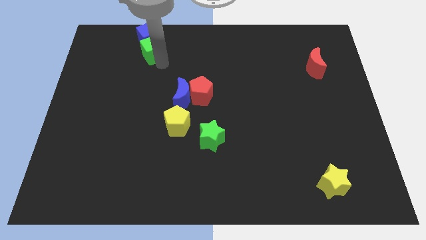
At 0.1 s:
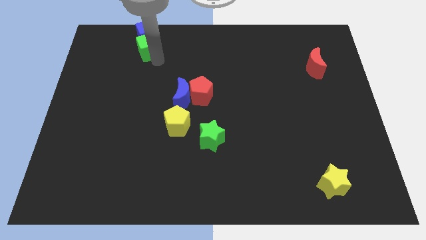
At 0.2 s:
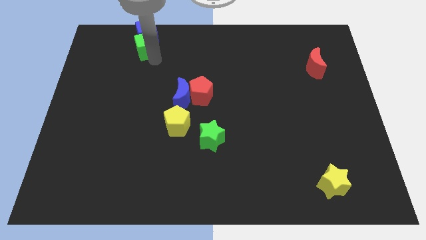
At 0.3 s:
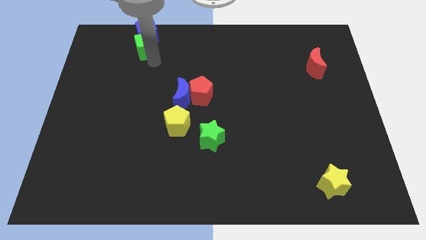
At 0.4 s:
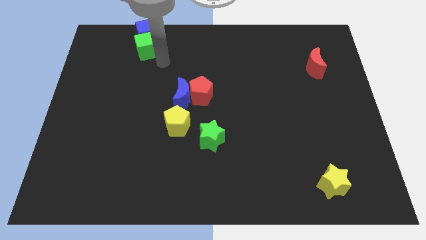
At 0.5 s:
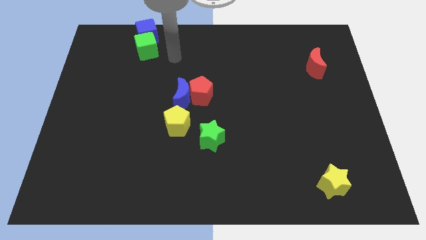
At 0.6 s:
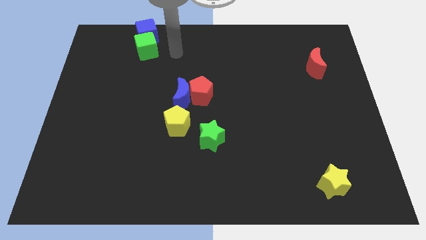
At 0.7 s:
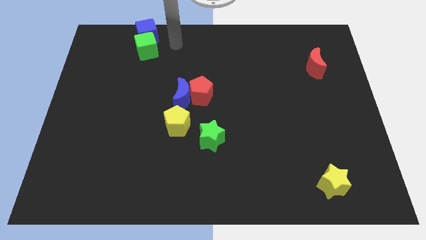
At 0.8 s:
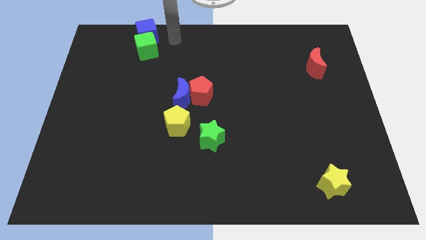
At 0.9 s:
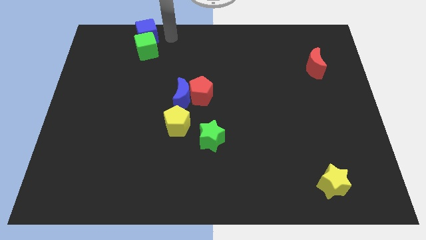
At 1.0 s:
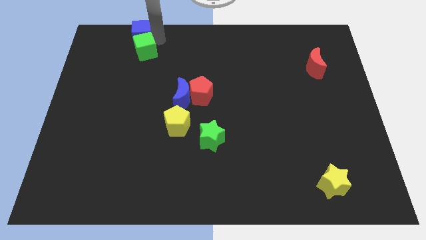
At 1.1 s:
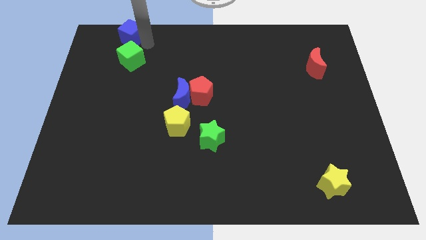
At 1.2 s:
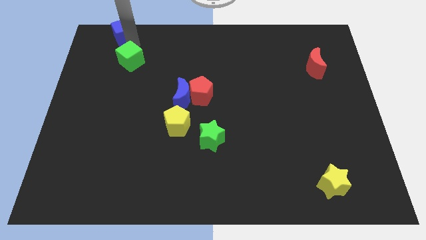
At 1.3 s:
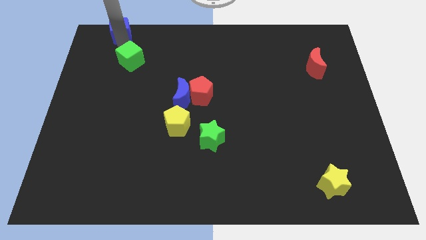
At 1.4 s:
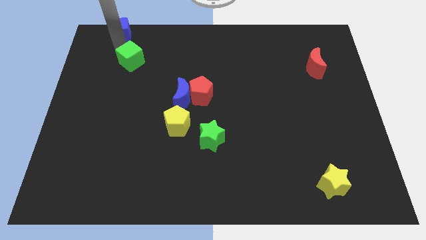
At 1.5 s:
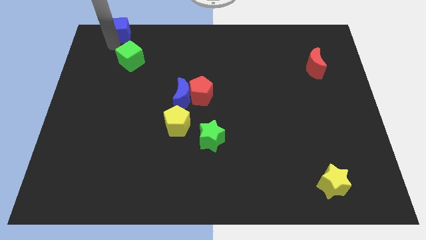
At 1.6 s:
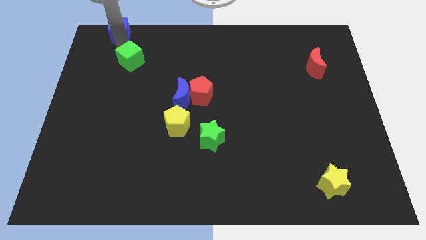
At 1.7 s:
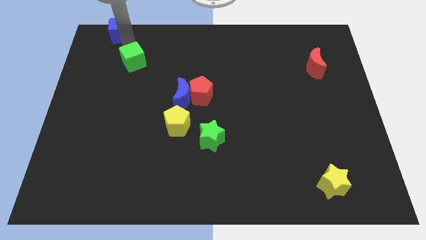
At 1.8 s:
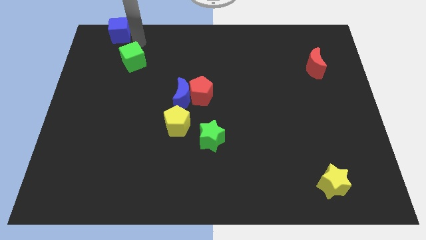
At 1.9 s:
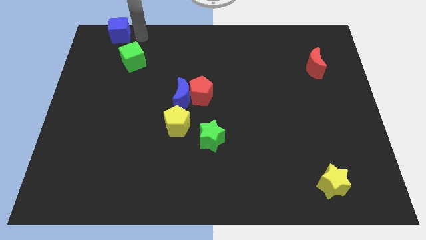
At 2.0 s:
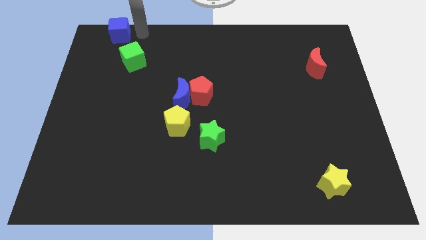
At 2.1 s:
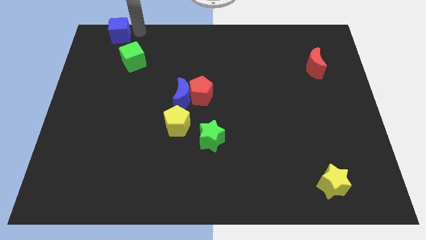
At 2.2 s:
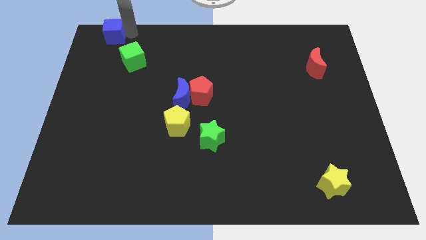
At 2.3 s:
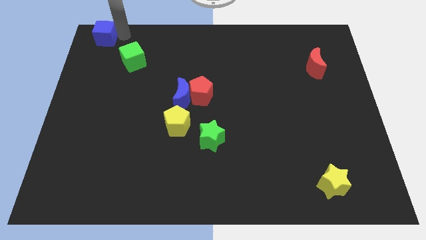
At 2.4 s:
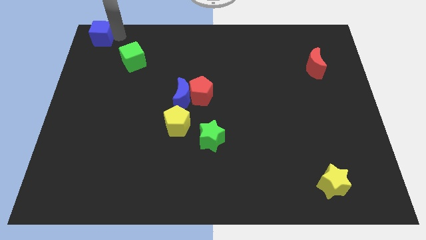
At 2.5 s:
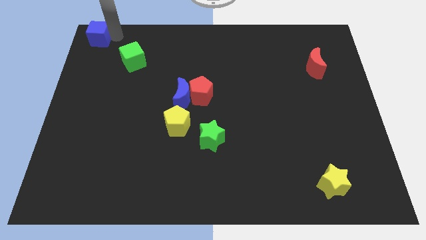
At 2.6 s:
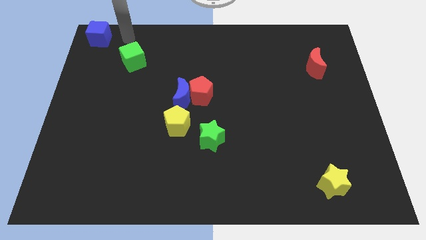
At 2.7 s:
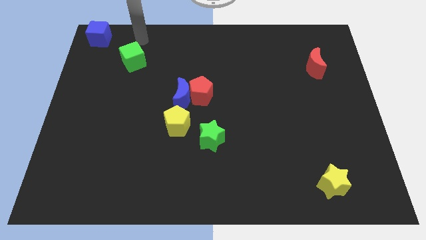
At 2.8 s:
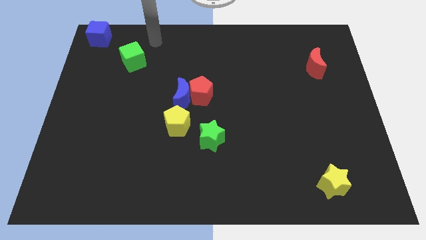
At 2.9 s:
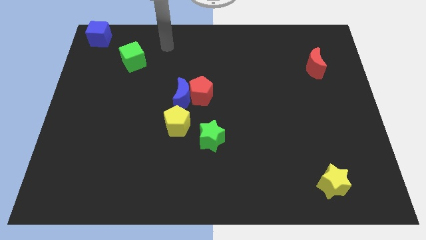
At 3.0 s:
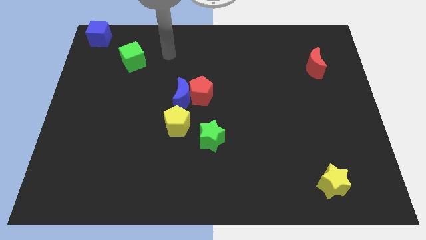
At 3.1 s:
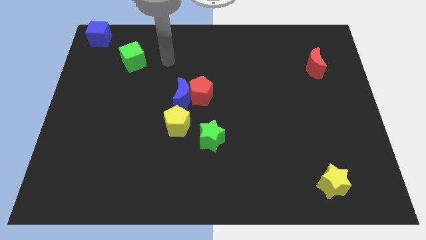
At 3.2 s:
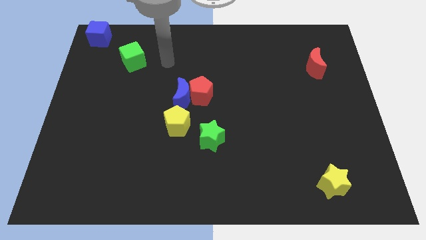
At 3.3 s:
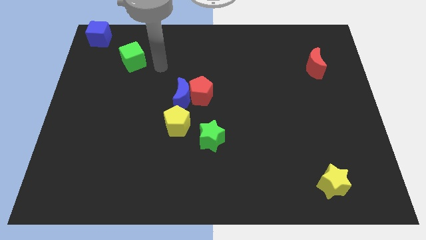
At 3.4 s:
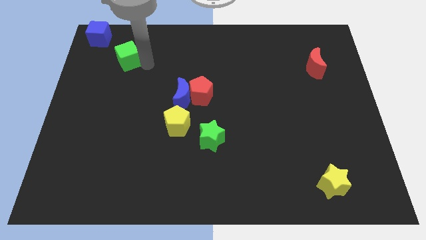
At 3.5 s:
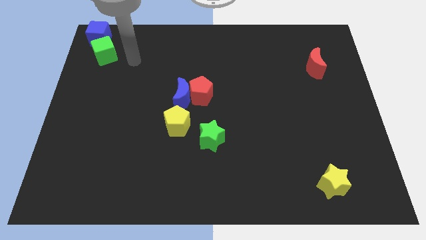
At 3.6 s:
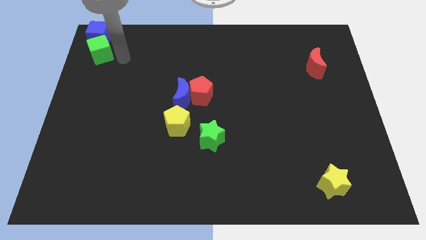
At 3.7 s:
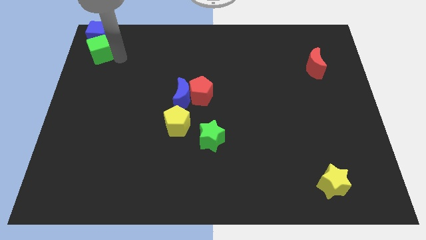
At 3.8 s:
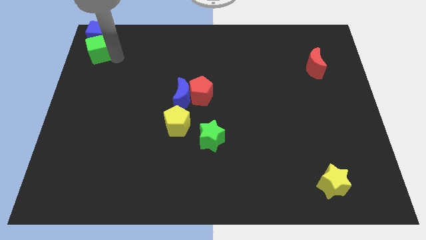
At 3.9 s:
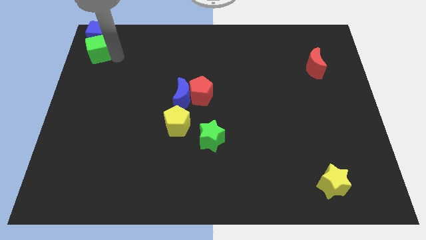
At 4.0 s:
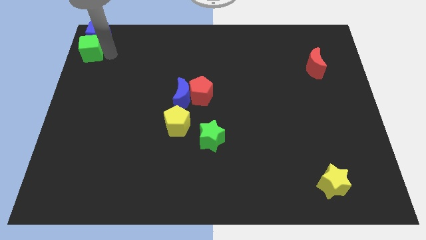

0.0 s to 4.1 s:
slide green and blue cubes to the top left corner

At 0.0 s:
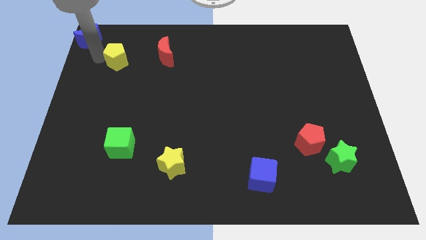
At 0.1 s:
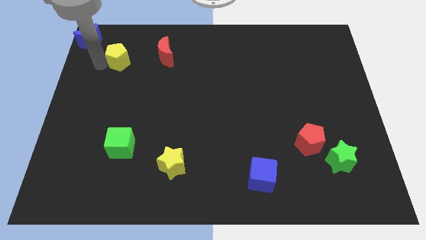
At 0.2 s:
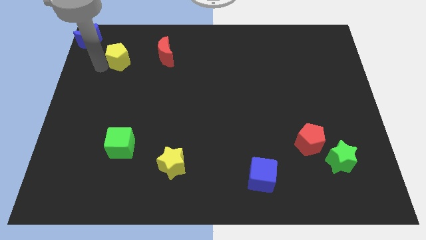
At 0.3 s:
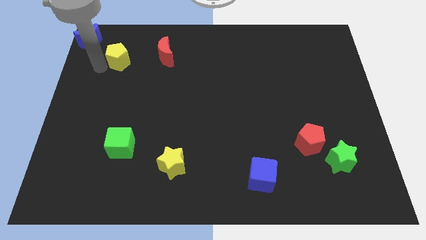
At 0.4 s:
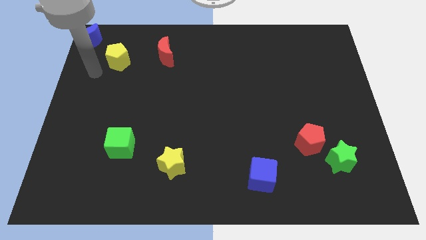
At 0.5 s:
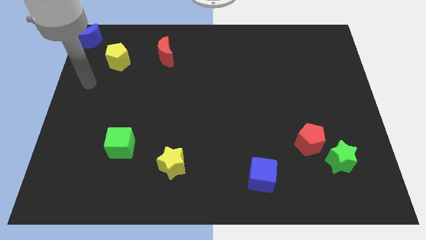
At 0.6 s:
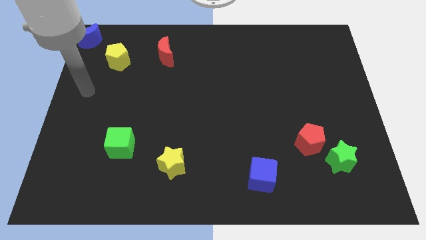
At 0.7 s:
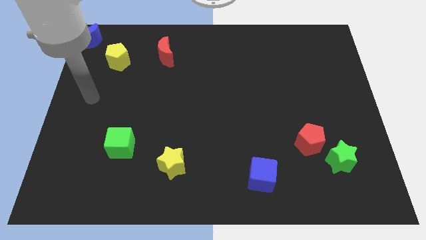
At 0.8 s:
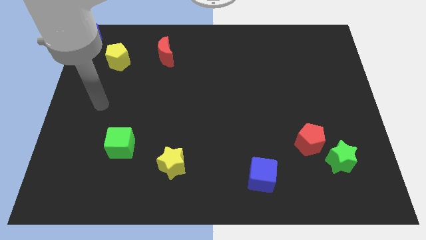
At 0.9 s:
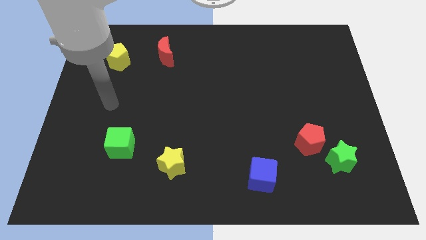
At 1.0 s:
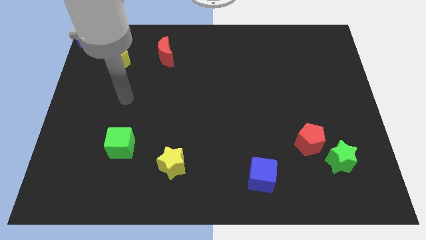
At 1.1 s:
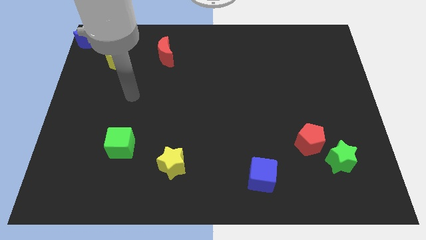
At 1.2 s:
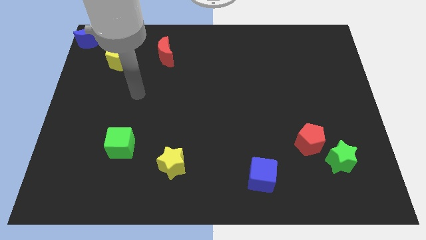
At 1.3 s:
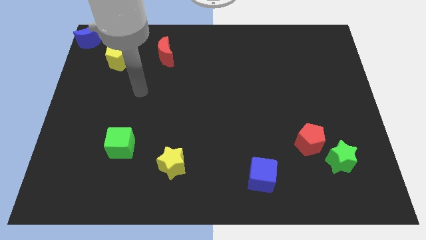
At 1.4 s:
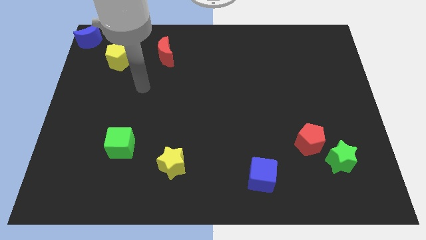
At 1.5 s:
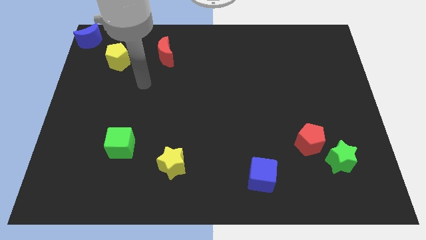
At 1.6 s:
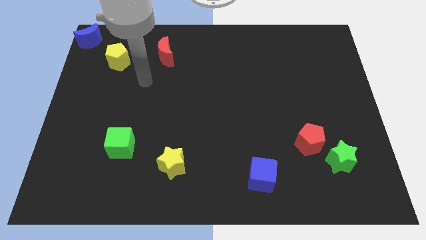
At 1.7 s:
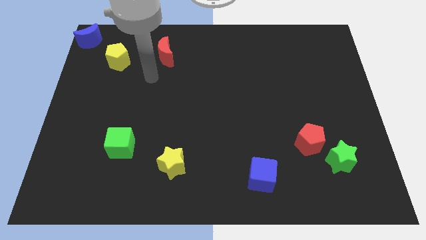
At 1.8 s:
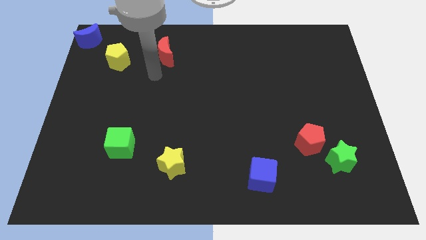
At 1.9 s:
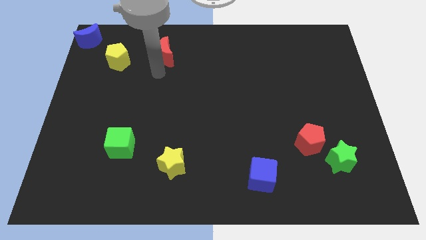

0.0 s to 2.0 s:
move your arm close to the red moon

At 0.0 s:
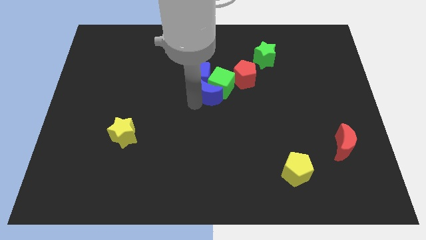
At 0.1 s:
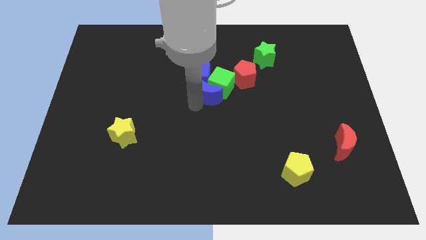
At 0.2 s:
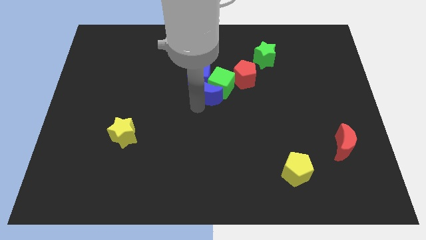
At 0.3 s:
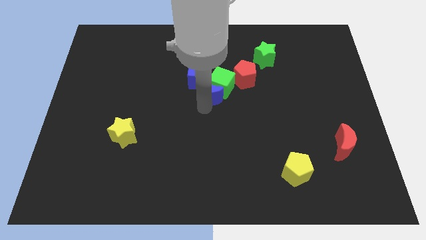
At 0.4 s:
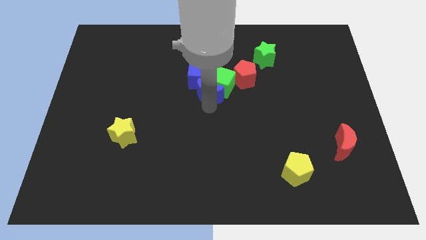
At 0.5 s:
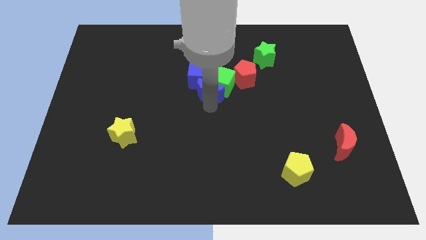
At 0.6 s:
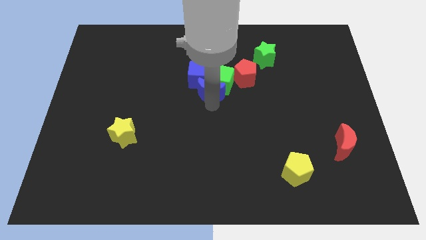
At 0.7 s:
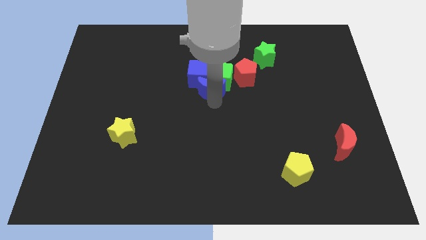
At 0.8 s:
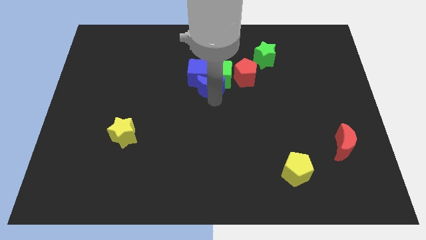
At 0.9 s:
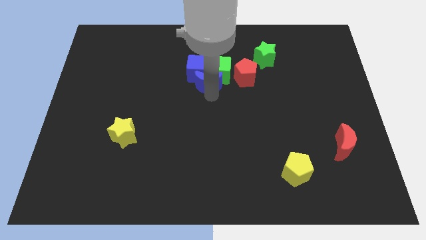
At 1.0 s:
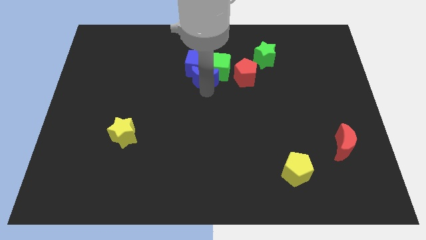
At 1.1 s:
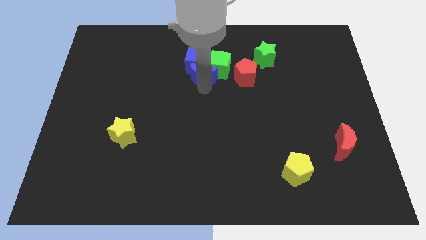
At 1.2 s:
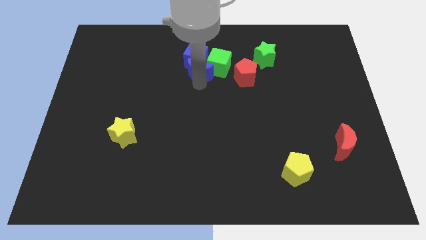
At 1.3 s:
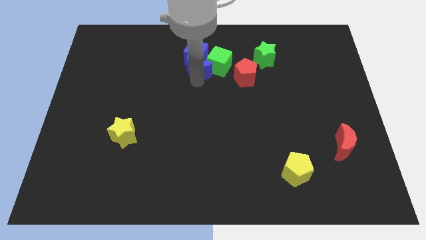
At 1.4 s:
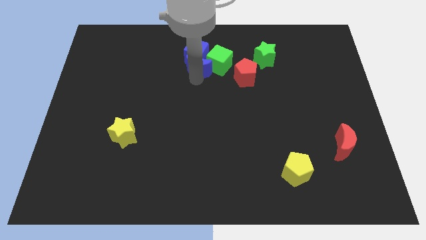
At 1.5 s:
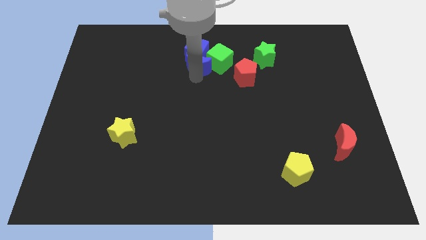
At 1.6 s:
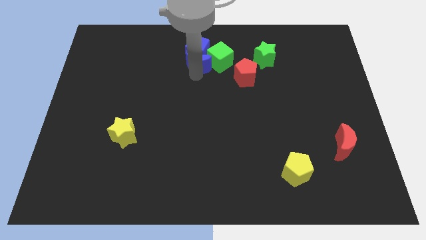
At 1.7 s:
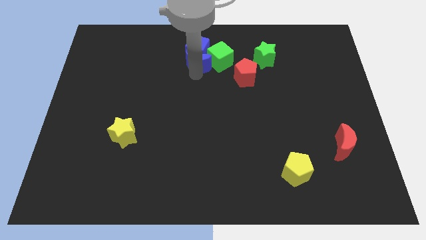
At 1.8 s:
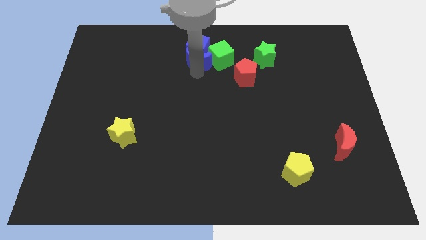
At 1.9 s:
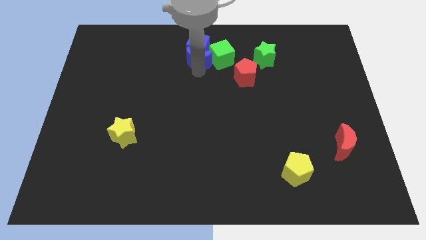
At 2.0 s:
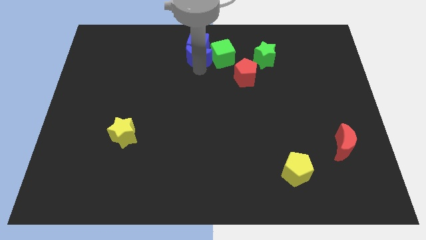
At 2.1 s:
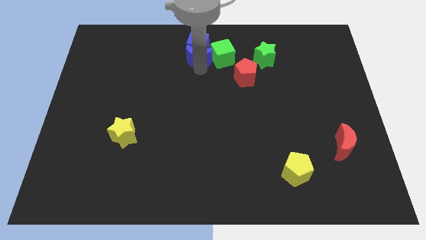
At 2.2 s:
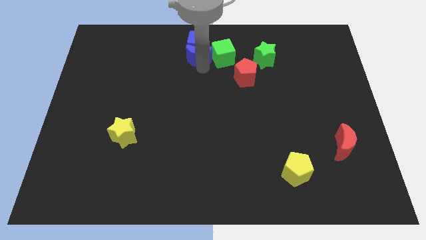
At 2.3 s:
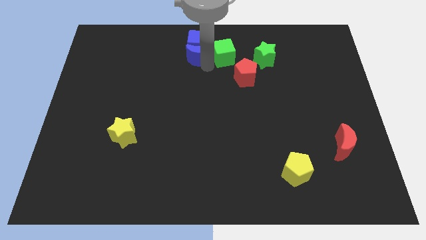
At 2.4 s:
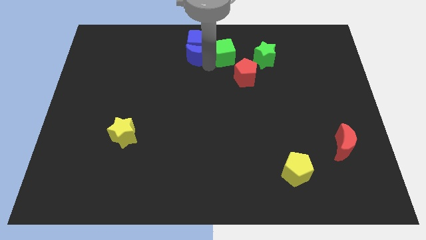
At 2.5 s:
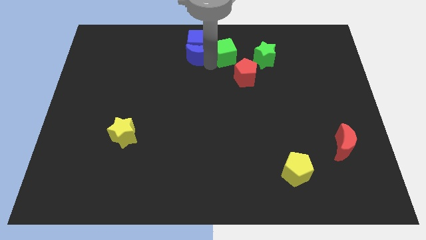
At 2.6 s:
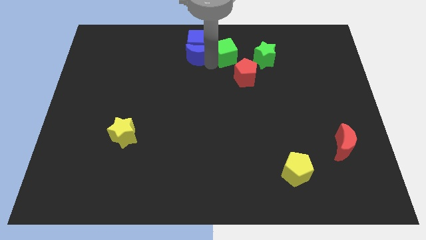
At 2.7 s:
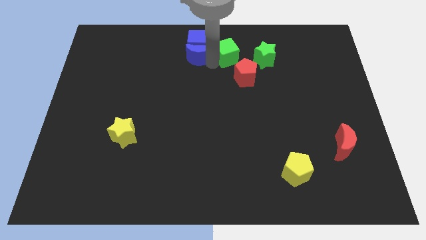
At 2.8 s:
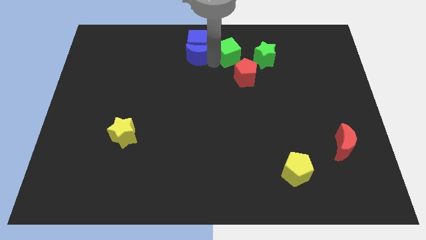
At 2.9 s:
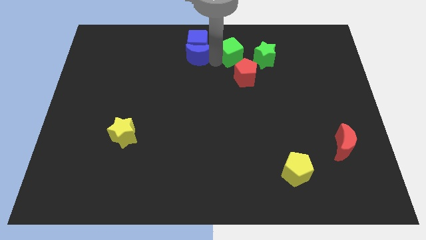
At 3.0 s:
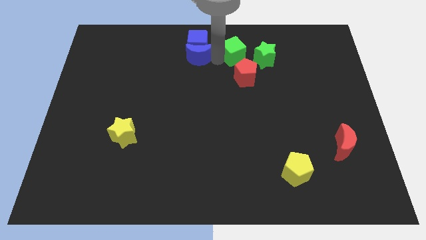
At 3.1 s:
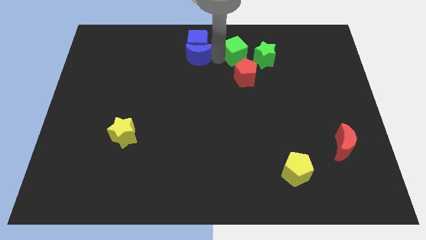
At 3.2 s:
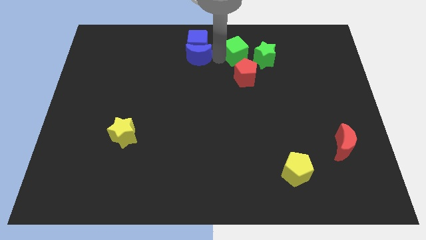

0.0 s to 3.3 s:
push blue crescent and blue cube to the top center of board
